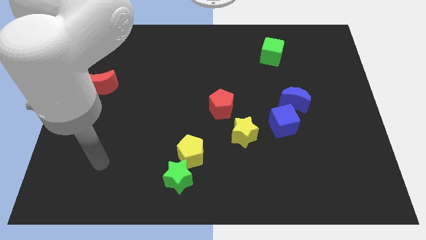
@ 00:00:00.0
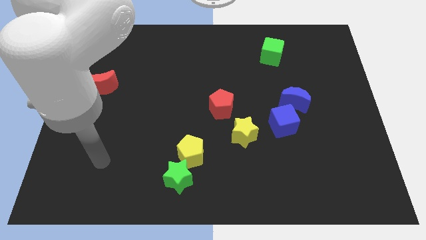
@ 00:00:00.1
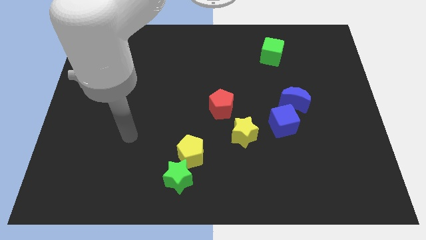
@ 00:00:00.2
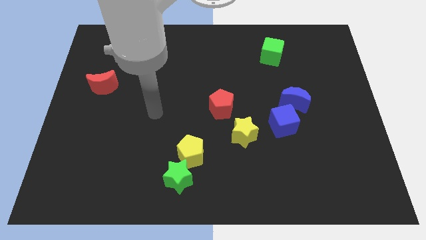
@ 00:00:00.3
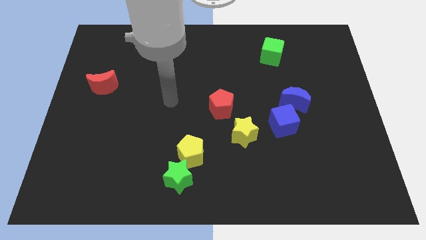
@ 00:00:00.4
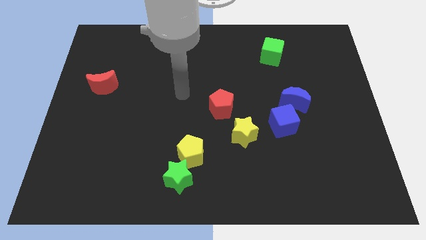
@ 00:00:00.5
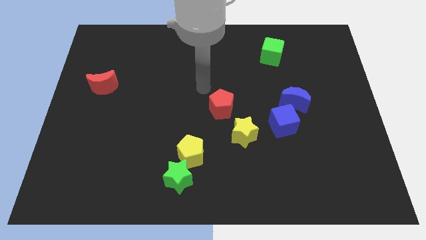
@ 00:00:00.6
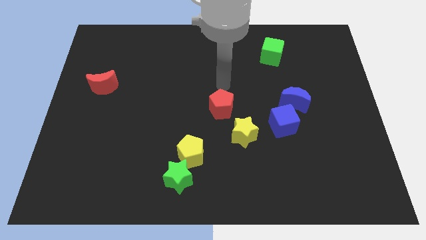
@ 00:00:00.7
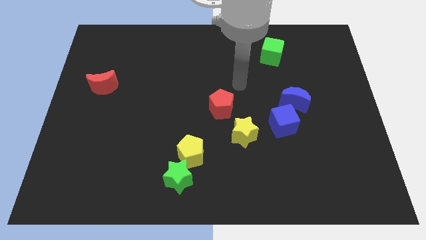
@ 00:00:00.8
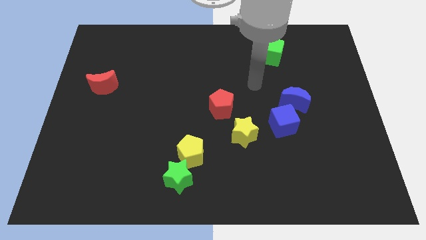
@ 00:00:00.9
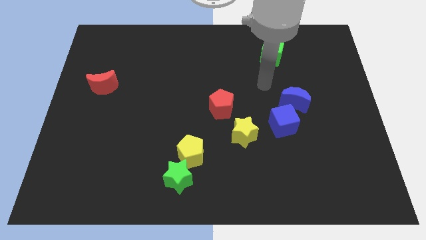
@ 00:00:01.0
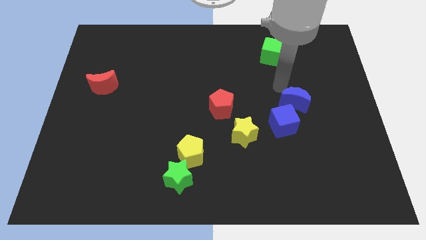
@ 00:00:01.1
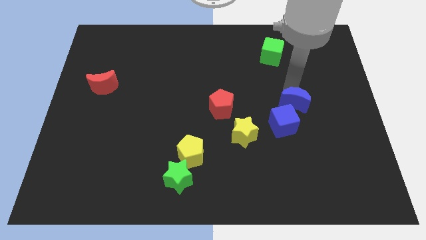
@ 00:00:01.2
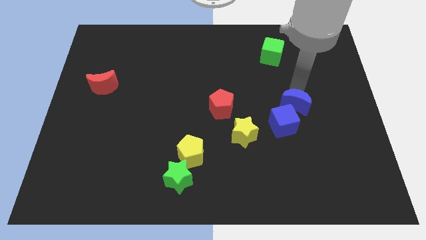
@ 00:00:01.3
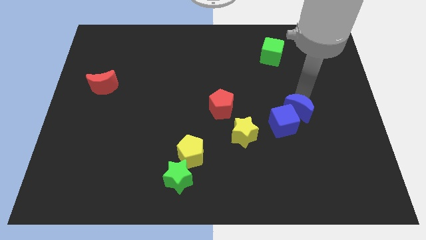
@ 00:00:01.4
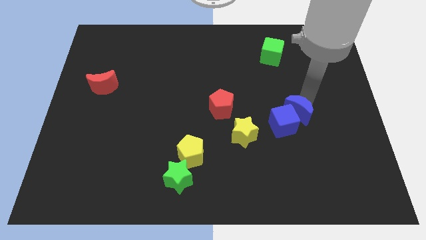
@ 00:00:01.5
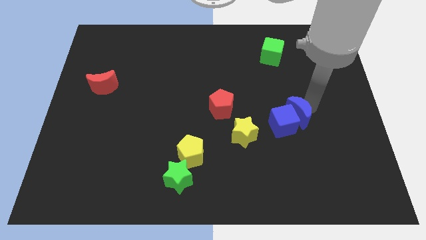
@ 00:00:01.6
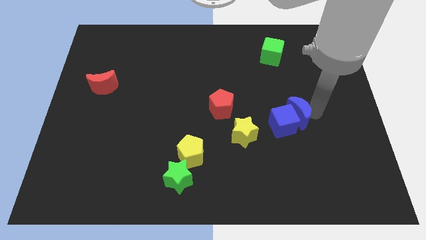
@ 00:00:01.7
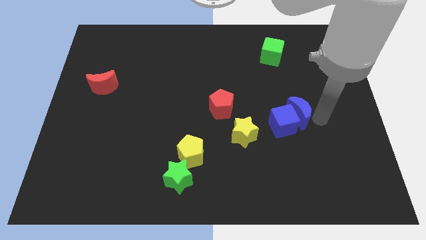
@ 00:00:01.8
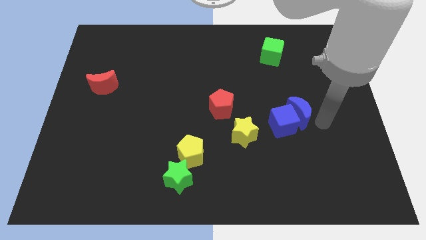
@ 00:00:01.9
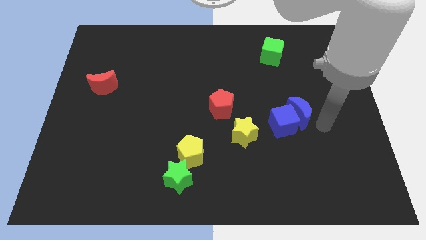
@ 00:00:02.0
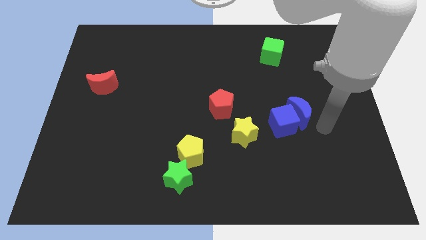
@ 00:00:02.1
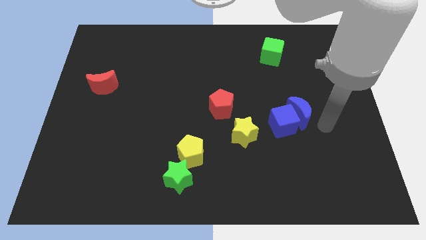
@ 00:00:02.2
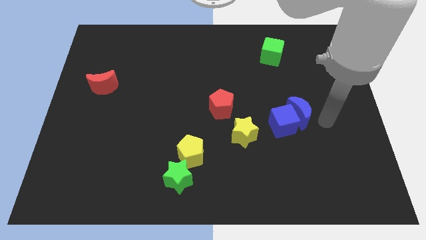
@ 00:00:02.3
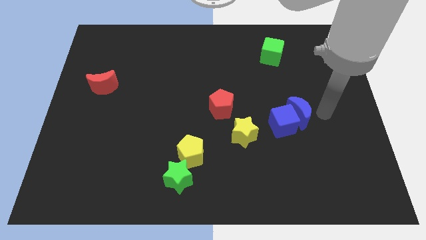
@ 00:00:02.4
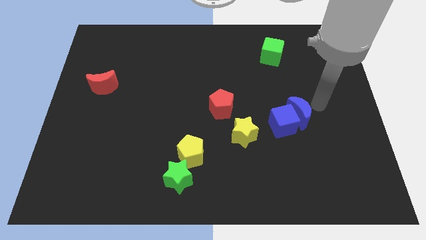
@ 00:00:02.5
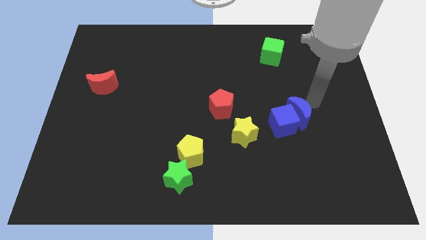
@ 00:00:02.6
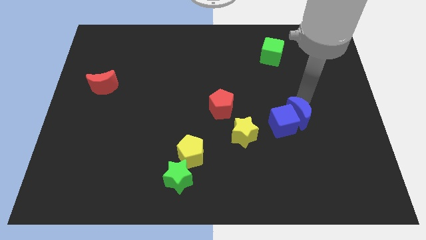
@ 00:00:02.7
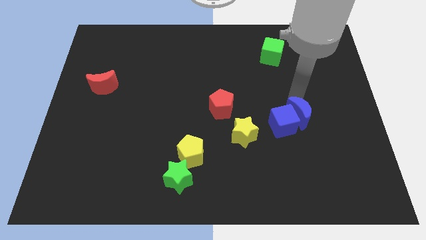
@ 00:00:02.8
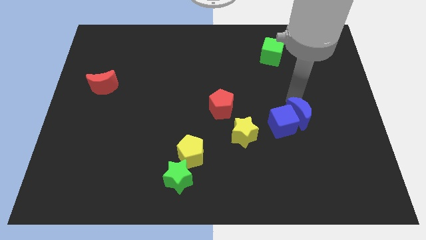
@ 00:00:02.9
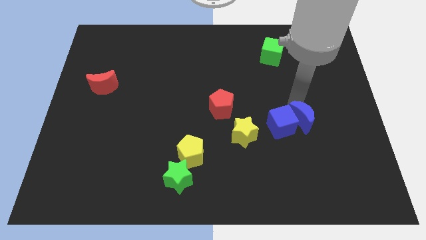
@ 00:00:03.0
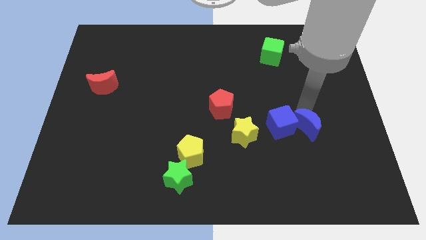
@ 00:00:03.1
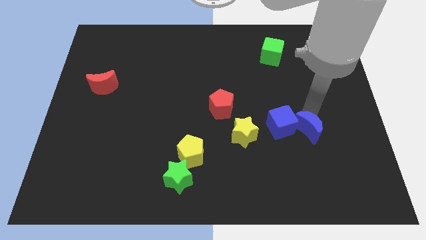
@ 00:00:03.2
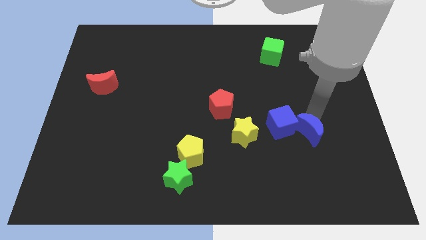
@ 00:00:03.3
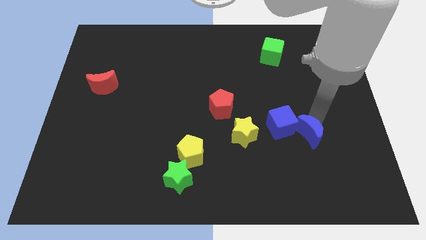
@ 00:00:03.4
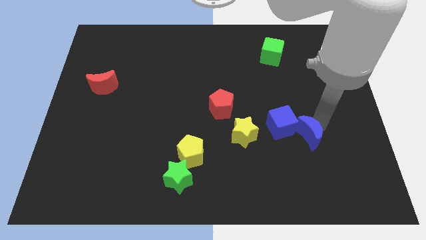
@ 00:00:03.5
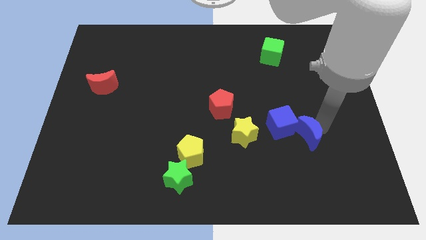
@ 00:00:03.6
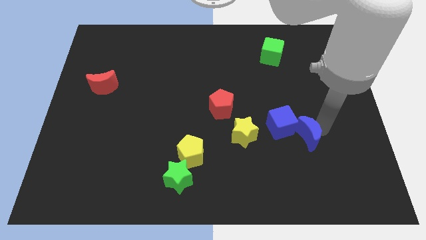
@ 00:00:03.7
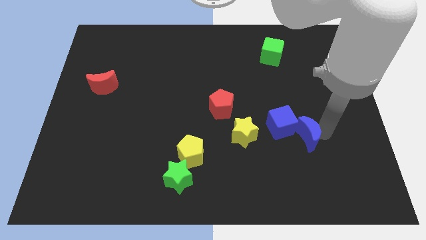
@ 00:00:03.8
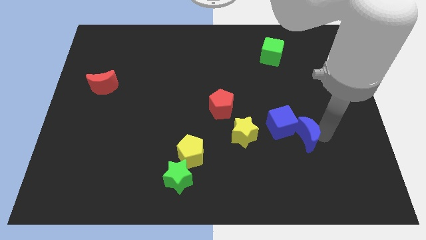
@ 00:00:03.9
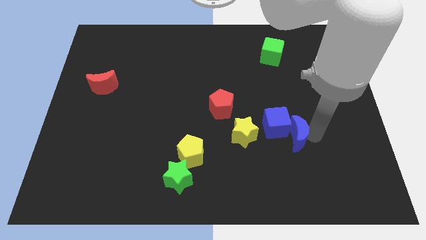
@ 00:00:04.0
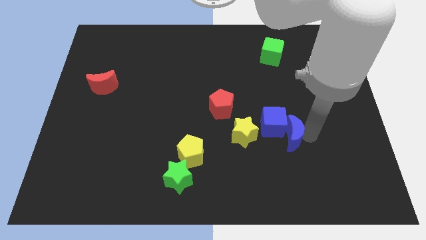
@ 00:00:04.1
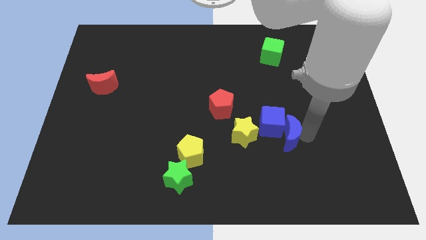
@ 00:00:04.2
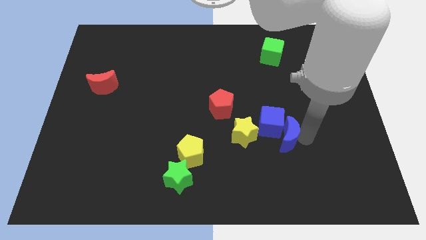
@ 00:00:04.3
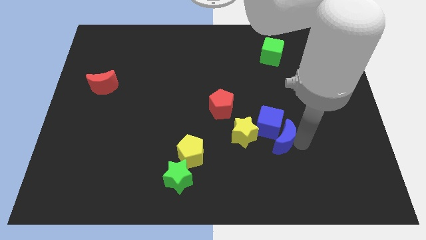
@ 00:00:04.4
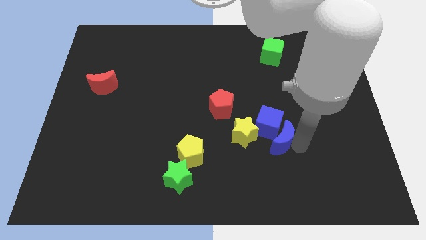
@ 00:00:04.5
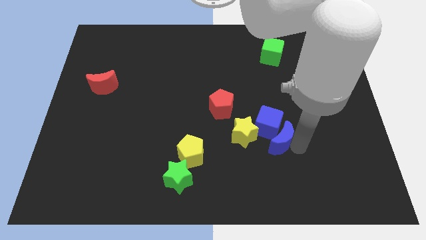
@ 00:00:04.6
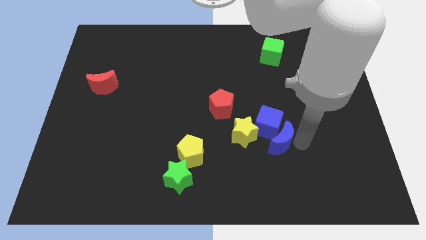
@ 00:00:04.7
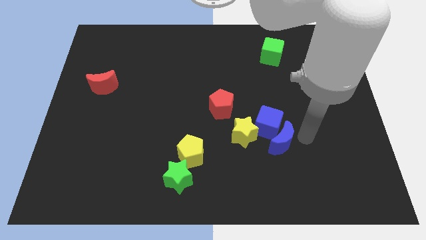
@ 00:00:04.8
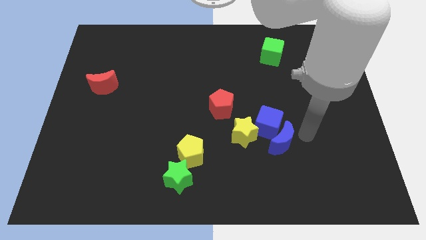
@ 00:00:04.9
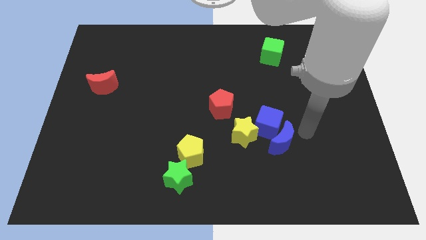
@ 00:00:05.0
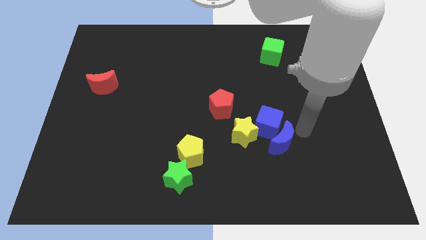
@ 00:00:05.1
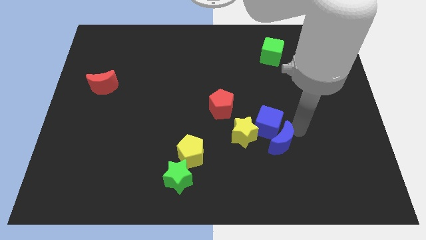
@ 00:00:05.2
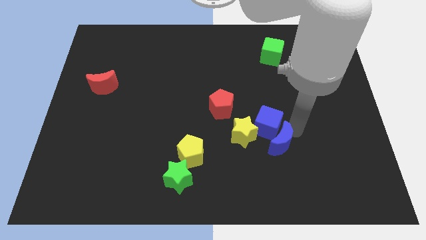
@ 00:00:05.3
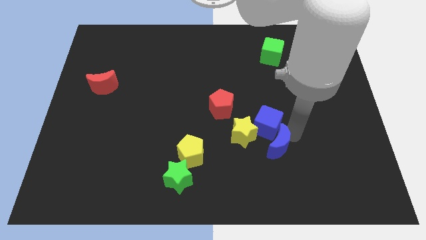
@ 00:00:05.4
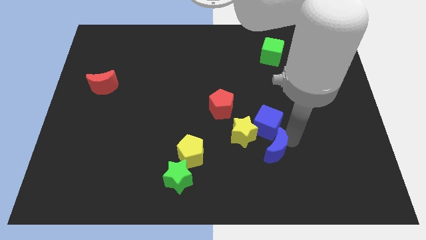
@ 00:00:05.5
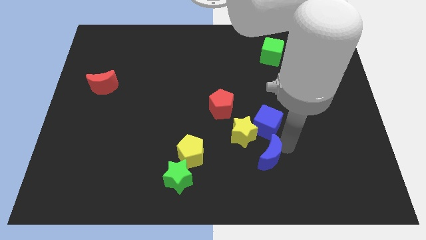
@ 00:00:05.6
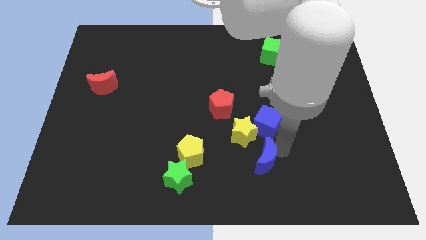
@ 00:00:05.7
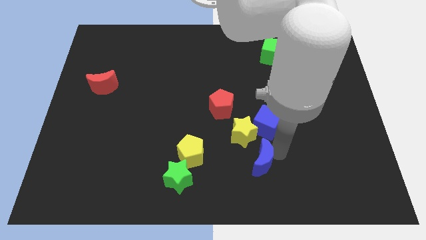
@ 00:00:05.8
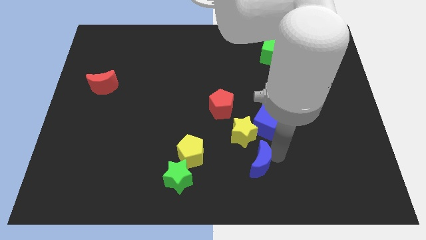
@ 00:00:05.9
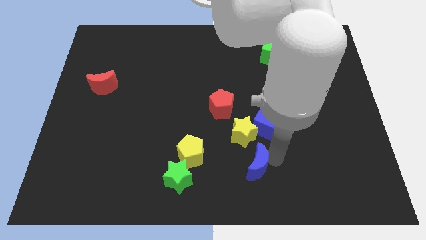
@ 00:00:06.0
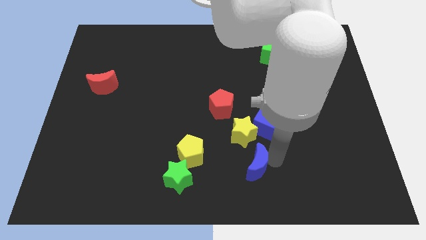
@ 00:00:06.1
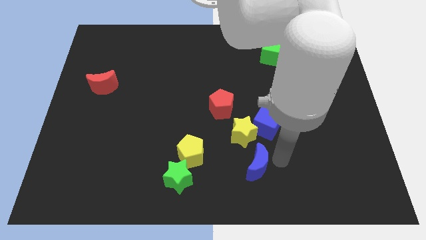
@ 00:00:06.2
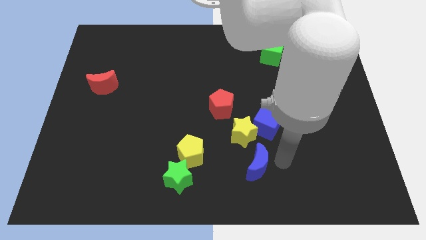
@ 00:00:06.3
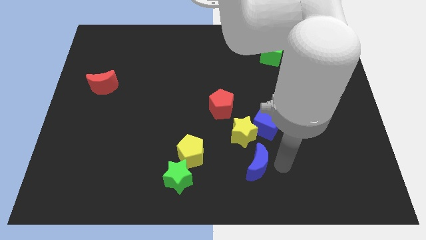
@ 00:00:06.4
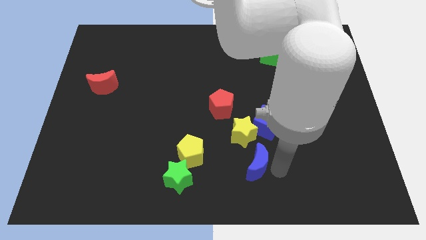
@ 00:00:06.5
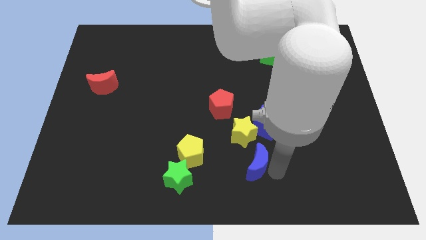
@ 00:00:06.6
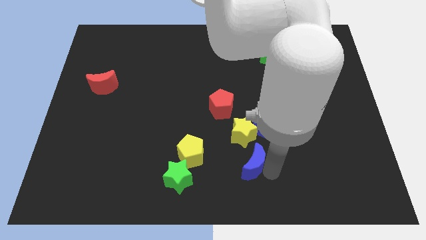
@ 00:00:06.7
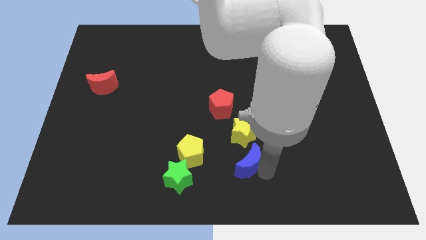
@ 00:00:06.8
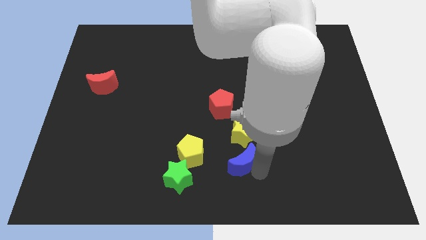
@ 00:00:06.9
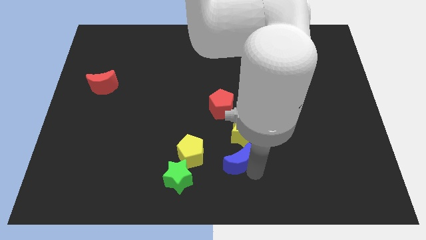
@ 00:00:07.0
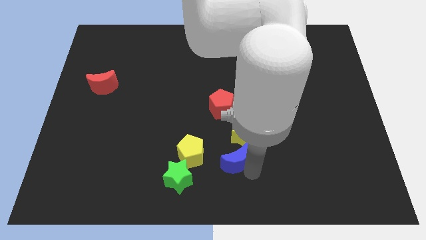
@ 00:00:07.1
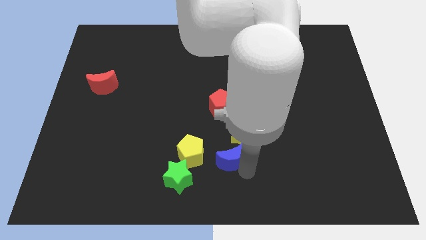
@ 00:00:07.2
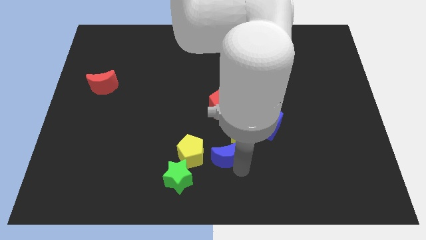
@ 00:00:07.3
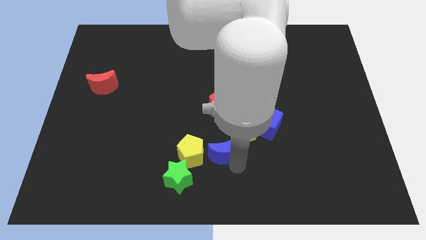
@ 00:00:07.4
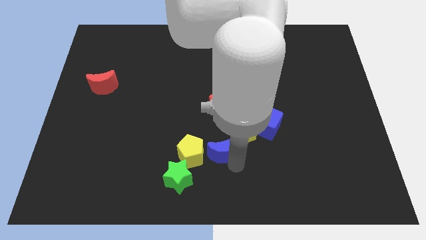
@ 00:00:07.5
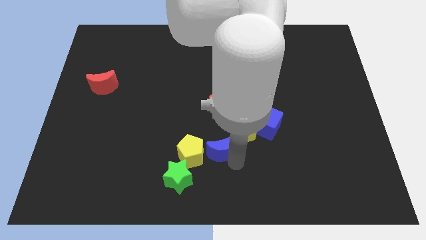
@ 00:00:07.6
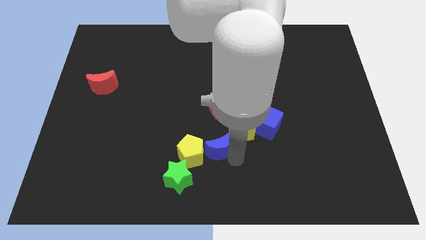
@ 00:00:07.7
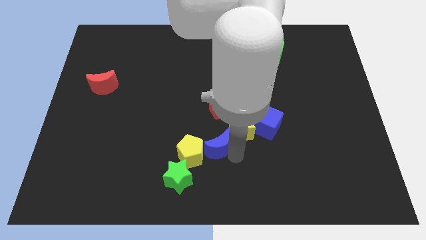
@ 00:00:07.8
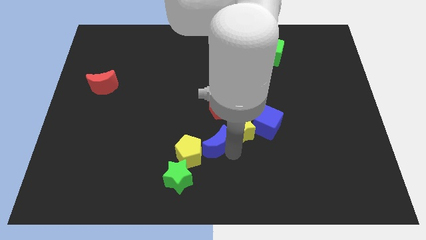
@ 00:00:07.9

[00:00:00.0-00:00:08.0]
move the blue moon close to the yellow pentagon
